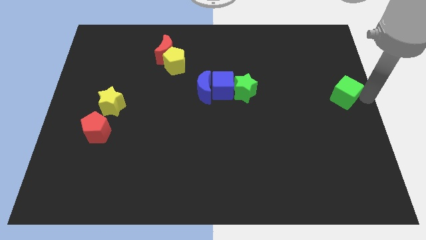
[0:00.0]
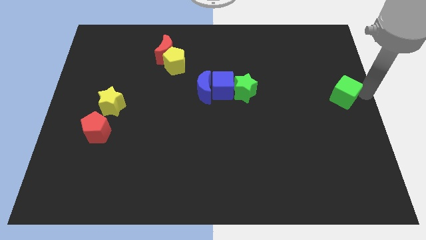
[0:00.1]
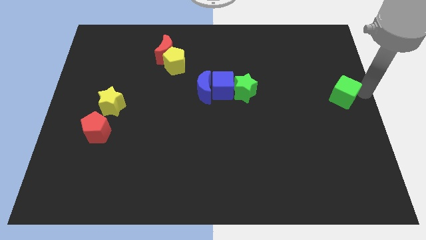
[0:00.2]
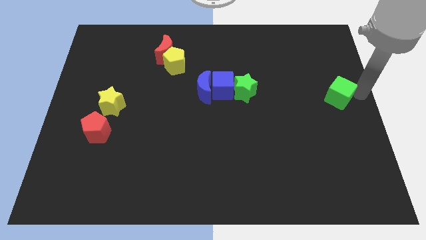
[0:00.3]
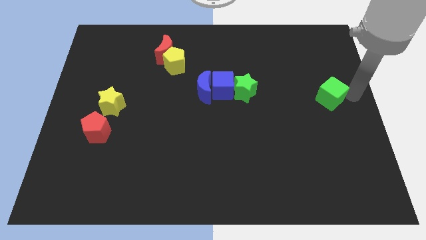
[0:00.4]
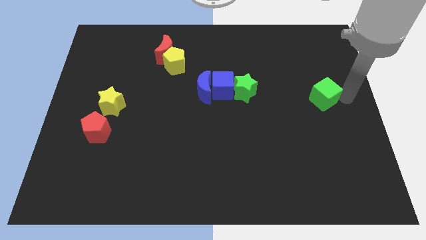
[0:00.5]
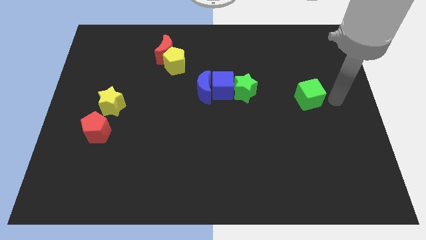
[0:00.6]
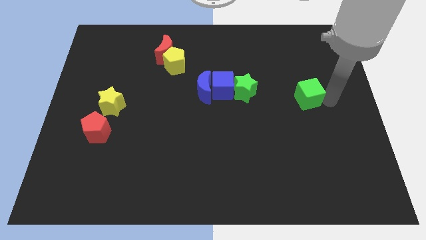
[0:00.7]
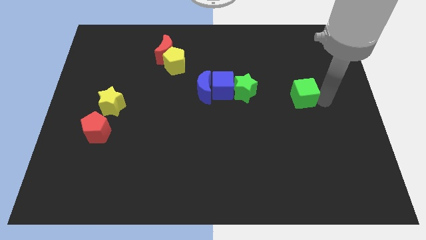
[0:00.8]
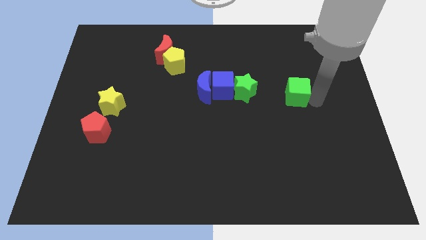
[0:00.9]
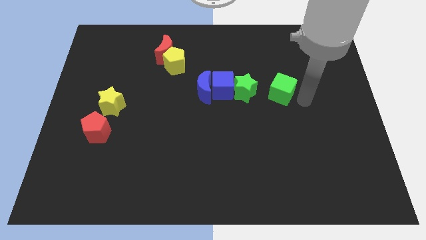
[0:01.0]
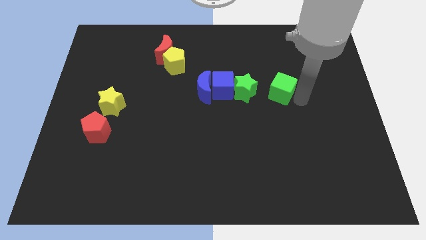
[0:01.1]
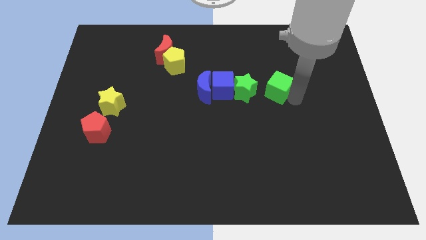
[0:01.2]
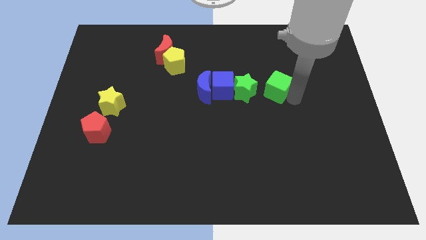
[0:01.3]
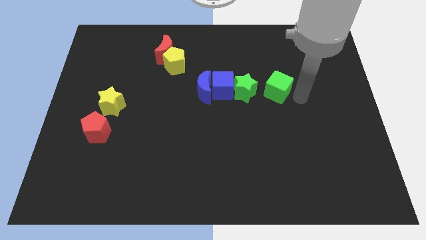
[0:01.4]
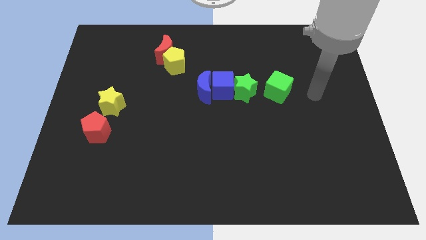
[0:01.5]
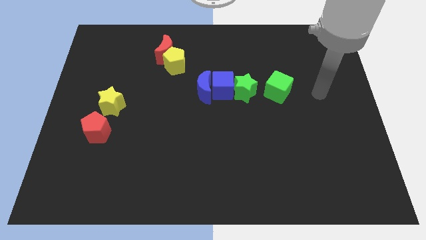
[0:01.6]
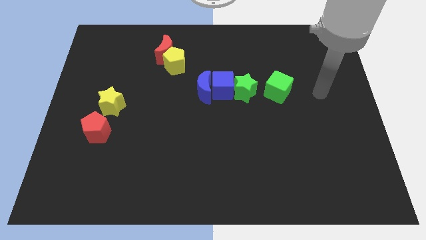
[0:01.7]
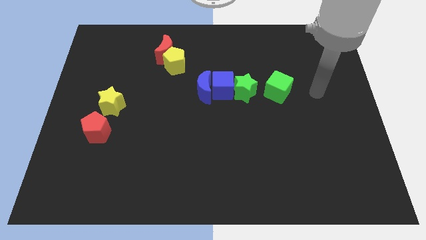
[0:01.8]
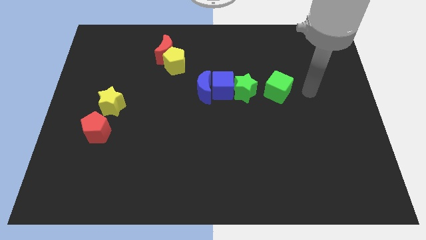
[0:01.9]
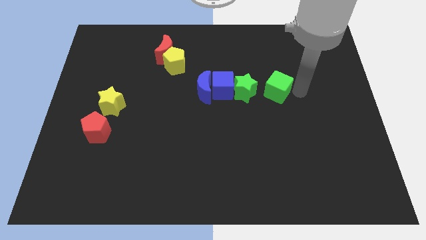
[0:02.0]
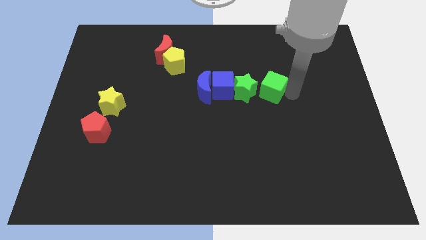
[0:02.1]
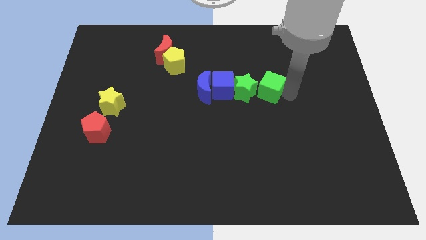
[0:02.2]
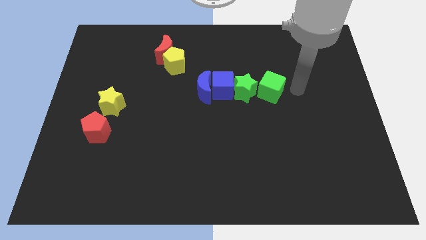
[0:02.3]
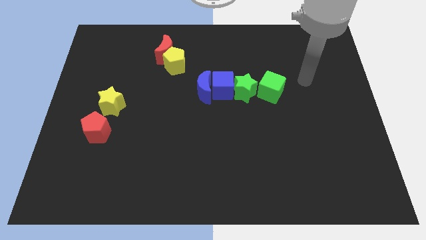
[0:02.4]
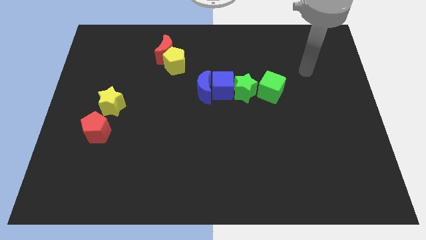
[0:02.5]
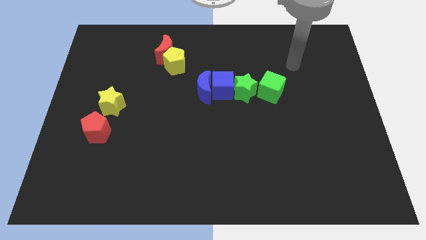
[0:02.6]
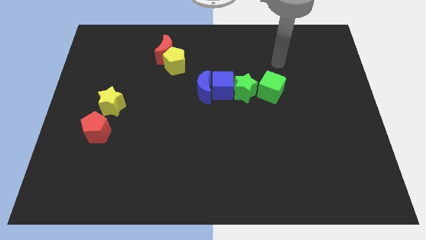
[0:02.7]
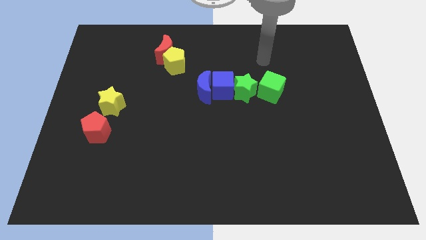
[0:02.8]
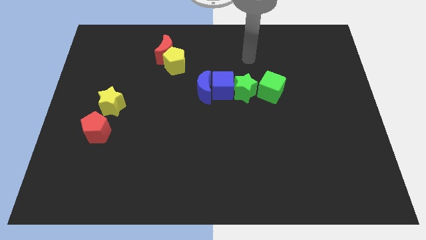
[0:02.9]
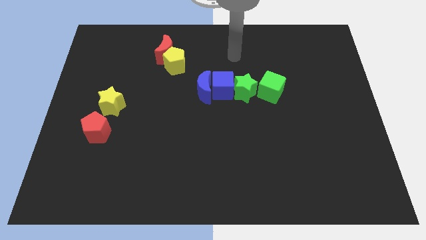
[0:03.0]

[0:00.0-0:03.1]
add green cube to green star

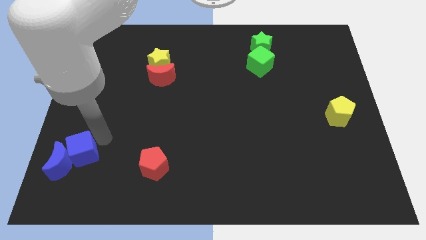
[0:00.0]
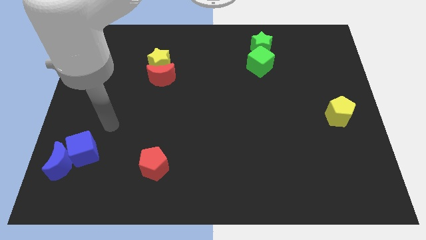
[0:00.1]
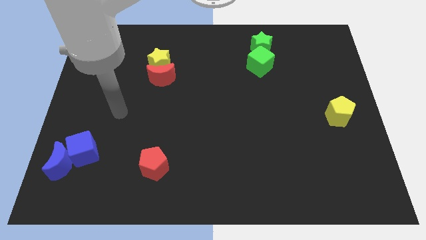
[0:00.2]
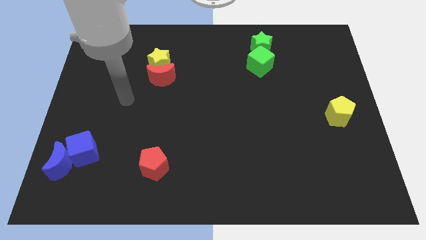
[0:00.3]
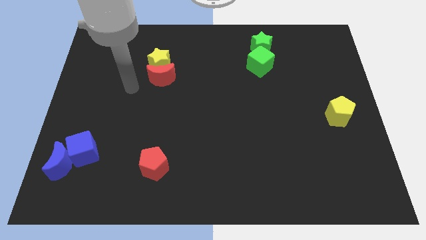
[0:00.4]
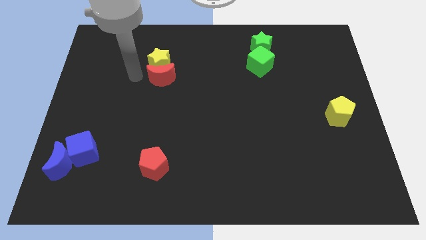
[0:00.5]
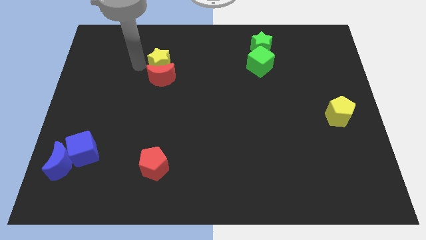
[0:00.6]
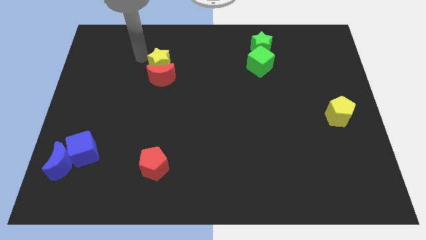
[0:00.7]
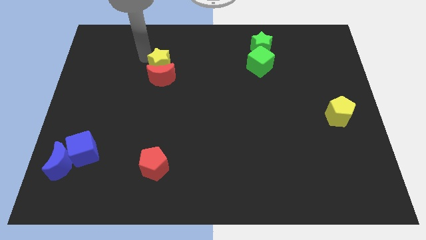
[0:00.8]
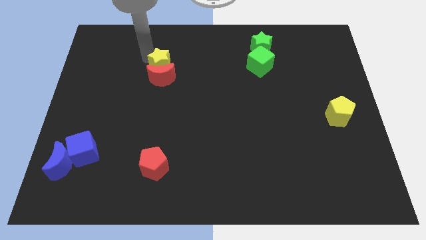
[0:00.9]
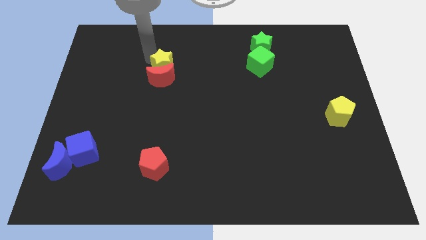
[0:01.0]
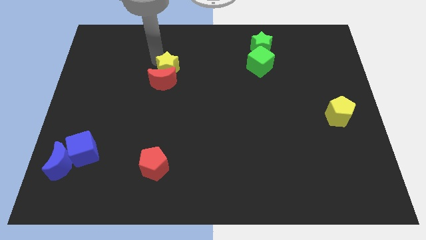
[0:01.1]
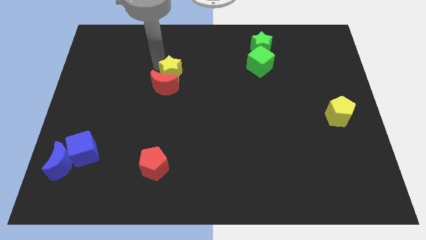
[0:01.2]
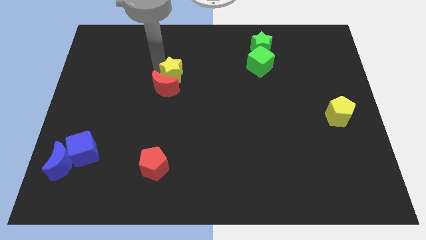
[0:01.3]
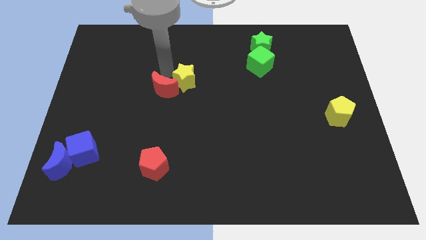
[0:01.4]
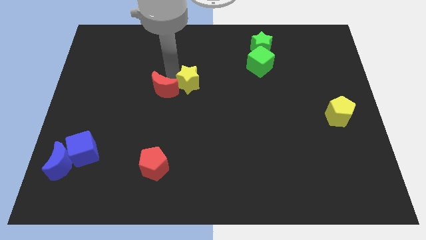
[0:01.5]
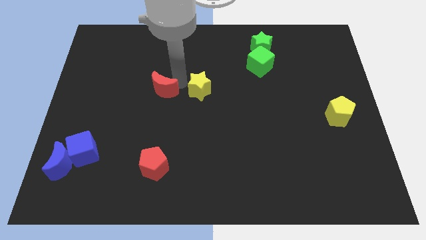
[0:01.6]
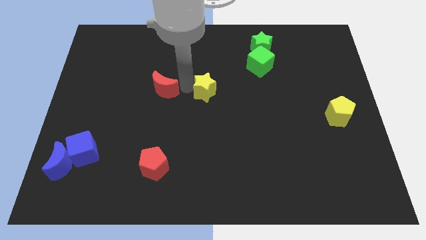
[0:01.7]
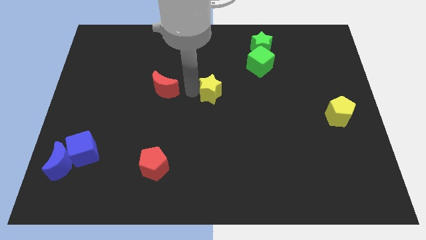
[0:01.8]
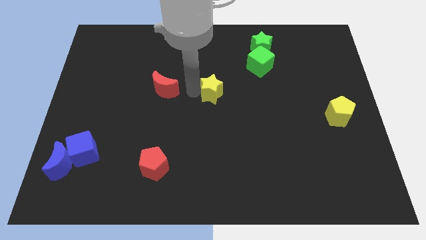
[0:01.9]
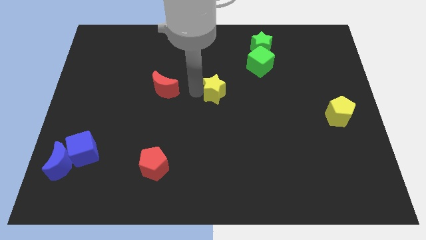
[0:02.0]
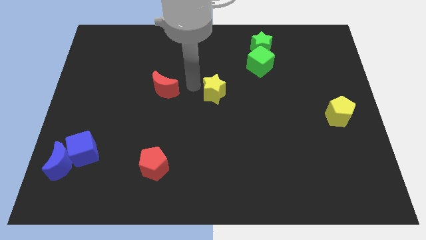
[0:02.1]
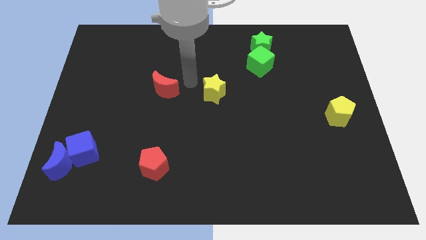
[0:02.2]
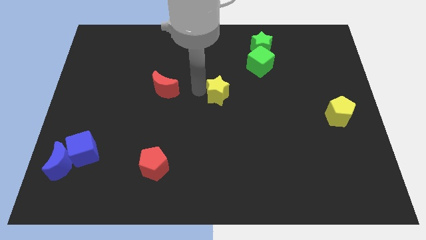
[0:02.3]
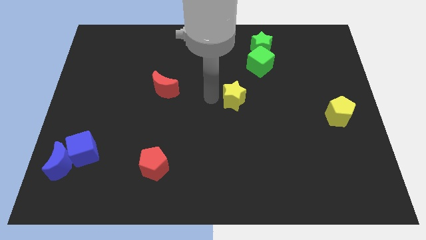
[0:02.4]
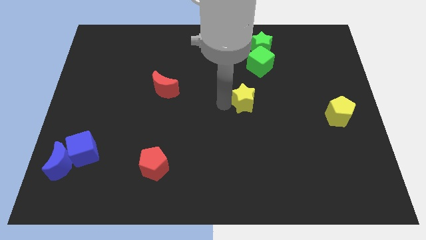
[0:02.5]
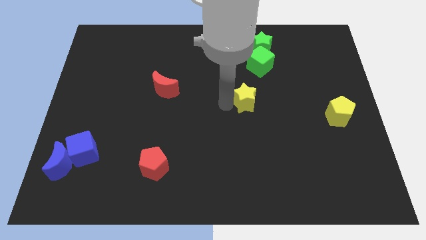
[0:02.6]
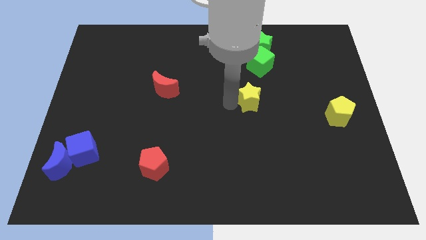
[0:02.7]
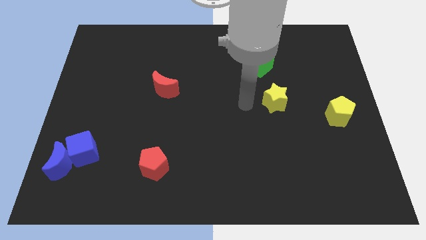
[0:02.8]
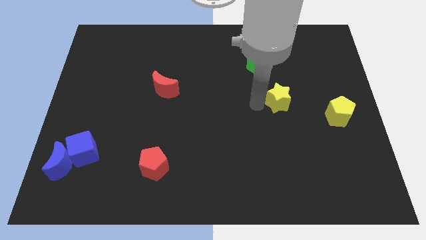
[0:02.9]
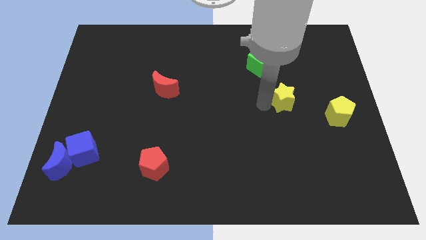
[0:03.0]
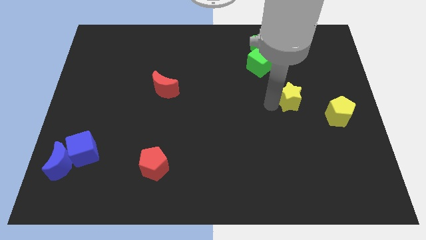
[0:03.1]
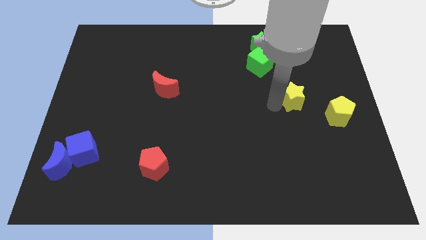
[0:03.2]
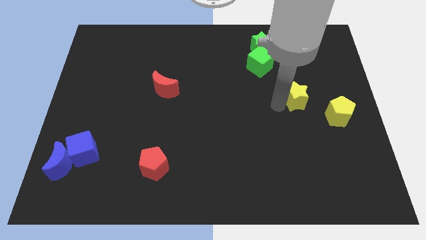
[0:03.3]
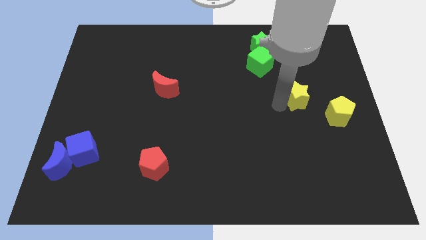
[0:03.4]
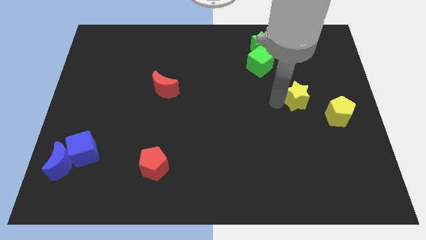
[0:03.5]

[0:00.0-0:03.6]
place the yellow star at the top of the yellow pentagon

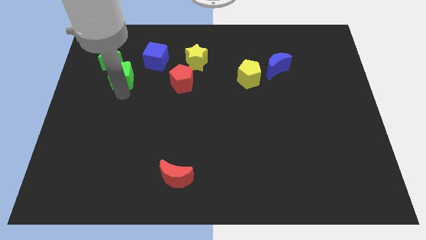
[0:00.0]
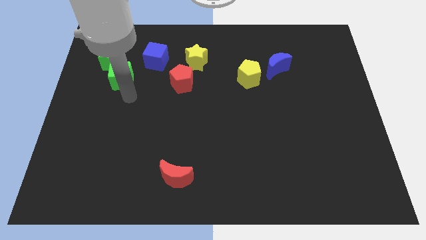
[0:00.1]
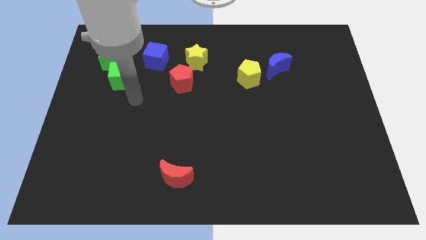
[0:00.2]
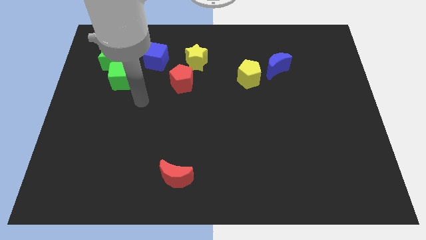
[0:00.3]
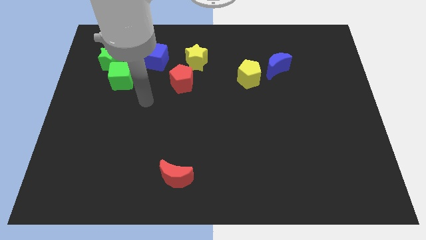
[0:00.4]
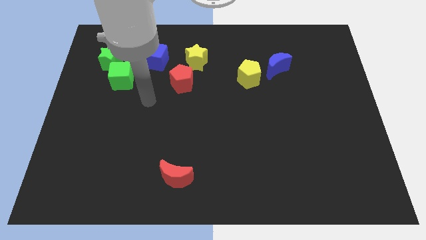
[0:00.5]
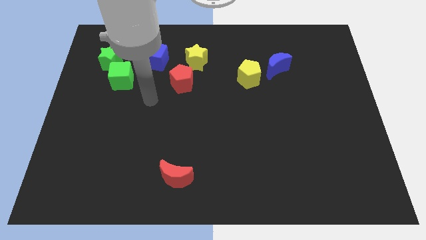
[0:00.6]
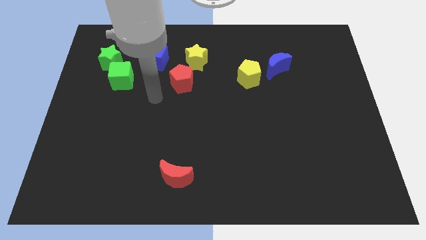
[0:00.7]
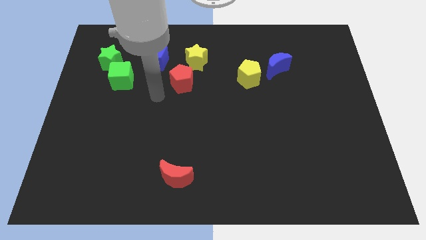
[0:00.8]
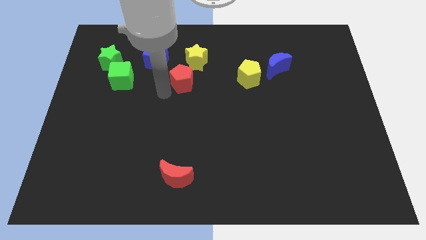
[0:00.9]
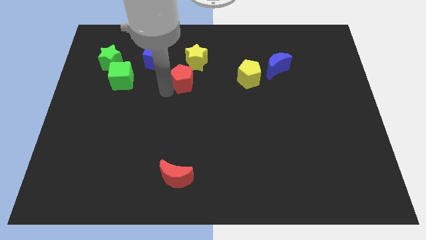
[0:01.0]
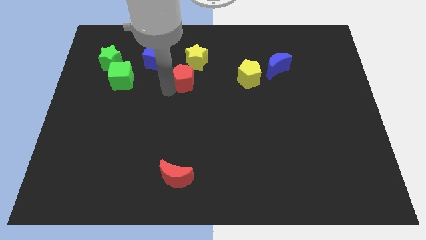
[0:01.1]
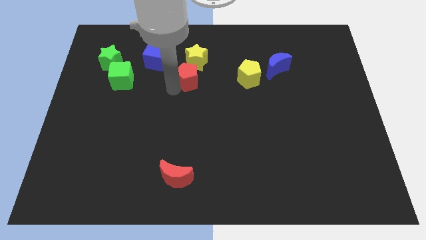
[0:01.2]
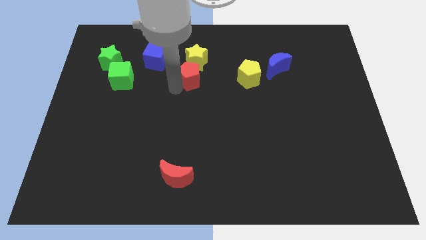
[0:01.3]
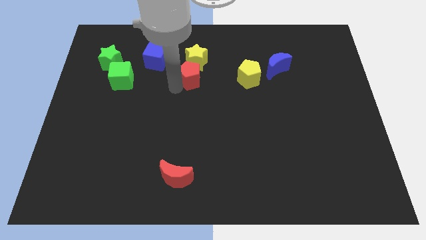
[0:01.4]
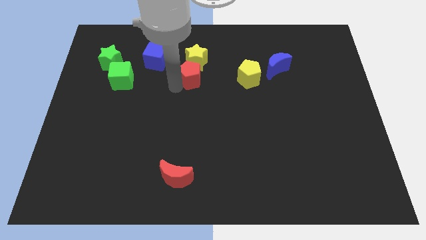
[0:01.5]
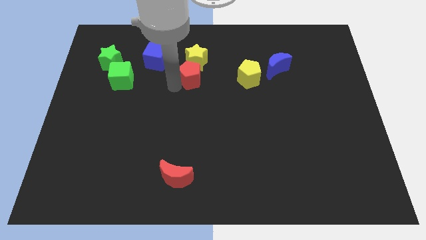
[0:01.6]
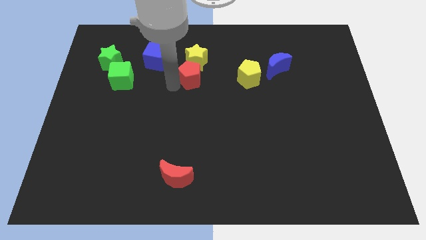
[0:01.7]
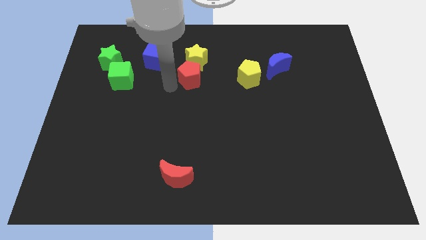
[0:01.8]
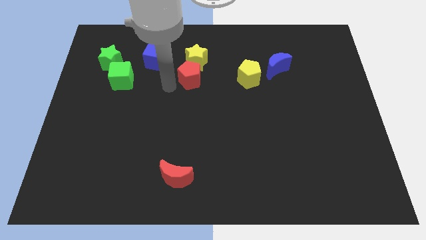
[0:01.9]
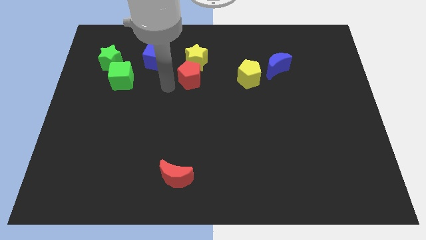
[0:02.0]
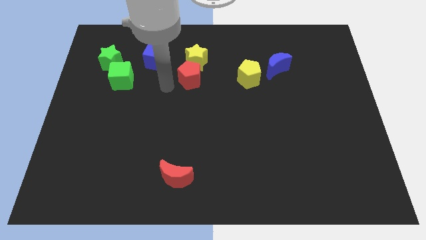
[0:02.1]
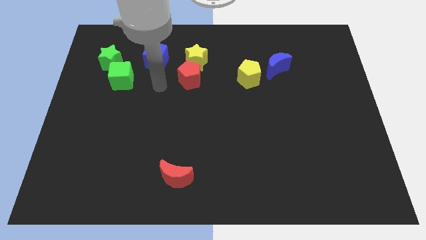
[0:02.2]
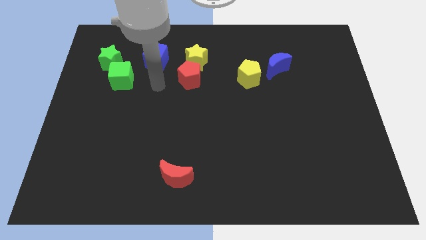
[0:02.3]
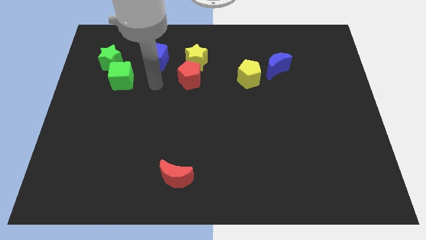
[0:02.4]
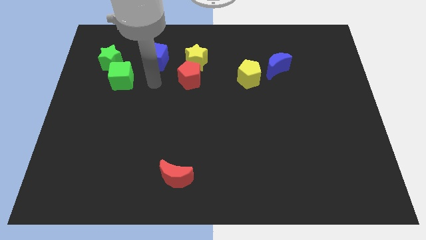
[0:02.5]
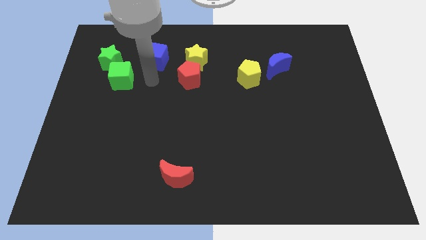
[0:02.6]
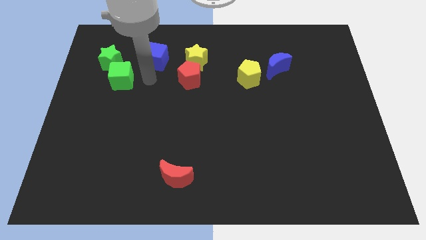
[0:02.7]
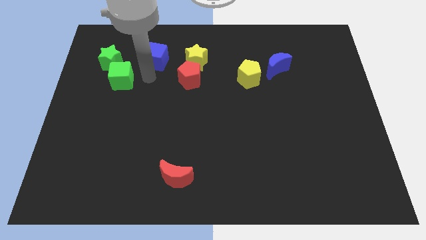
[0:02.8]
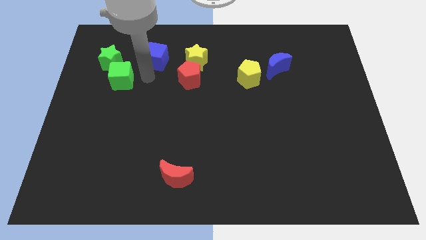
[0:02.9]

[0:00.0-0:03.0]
place red pentagon to the bottom of yellow star
